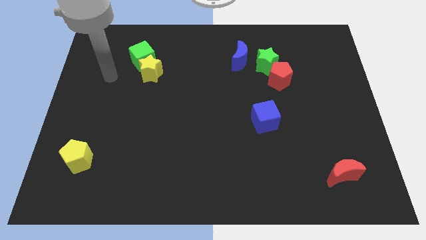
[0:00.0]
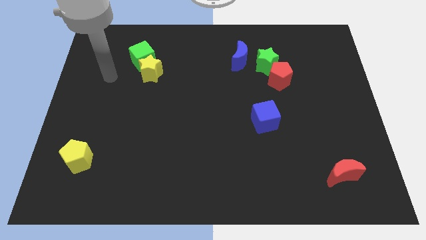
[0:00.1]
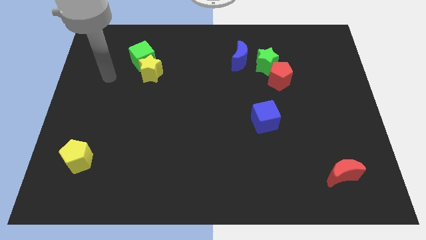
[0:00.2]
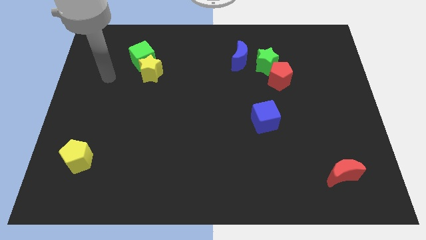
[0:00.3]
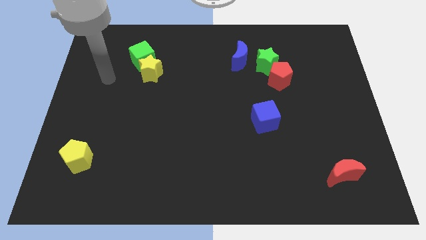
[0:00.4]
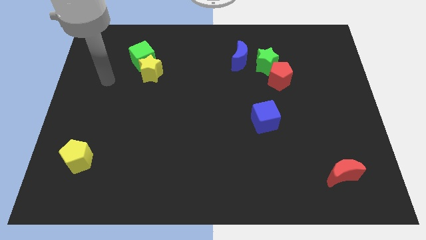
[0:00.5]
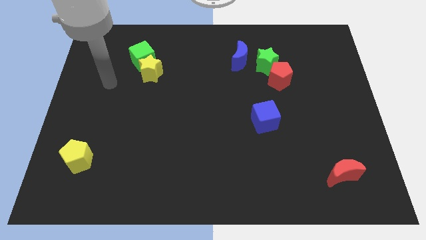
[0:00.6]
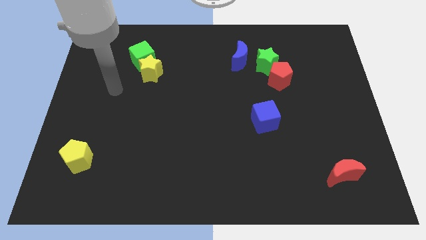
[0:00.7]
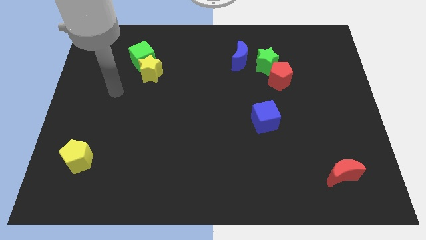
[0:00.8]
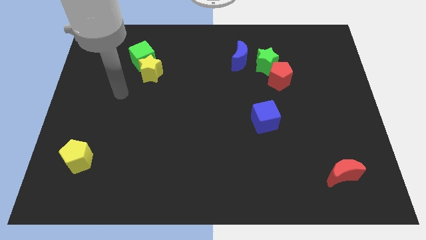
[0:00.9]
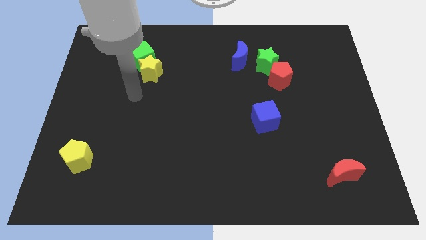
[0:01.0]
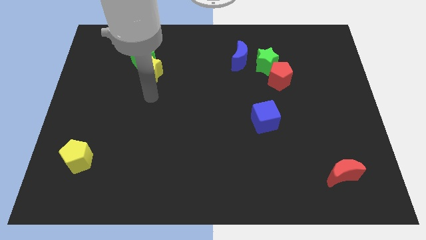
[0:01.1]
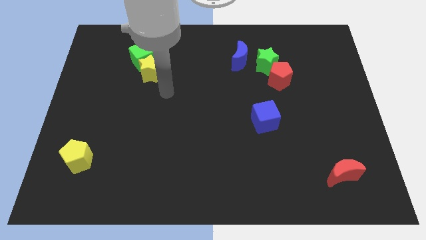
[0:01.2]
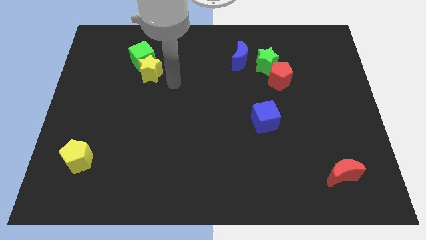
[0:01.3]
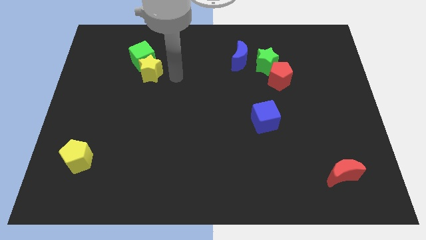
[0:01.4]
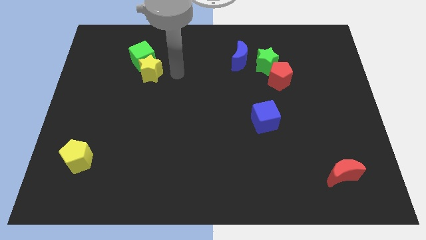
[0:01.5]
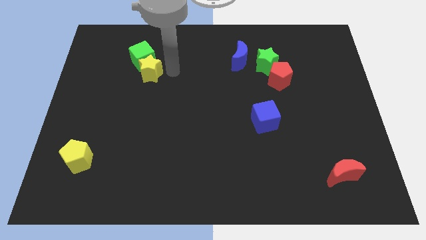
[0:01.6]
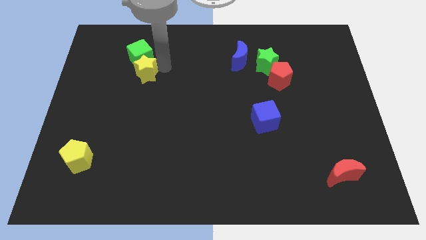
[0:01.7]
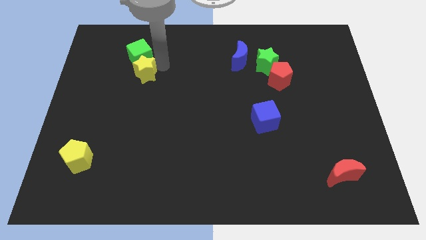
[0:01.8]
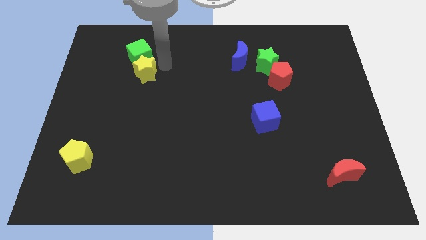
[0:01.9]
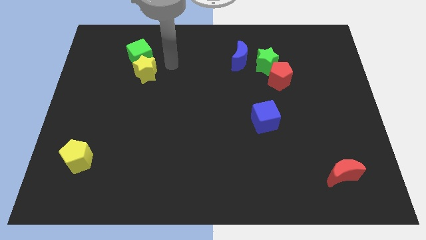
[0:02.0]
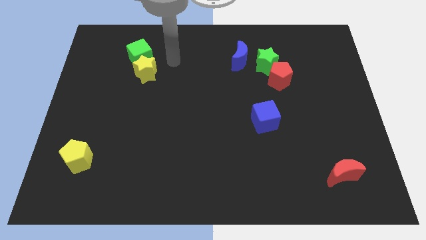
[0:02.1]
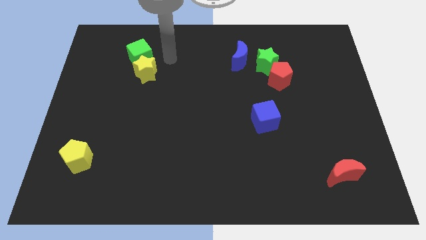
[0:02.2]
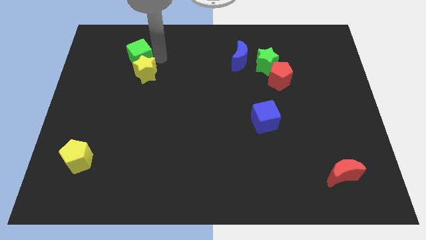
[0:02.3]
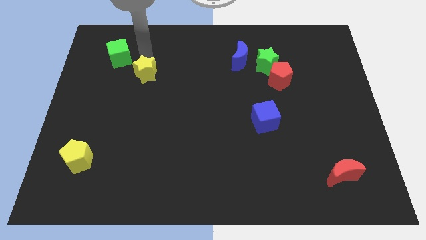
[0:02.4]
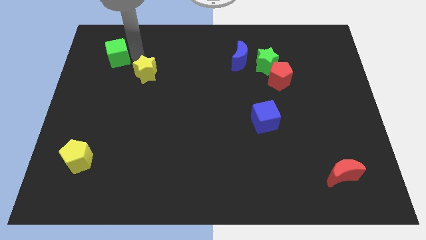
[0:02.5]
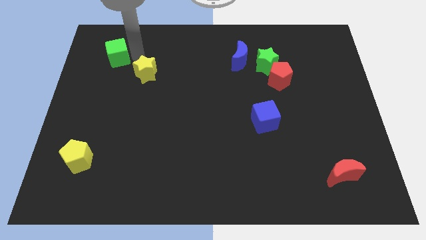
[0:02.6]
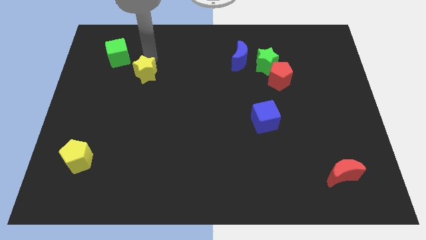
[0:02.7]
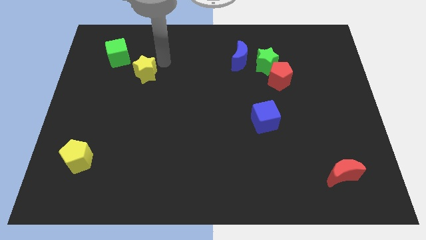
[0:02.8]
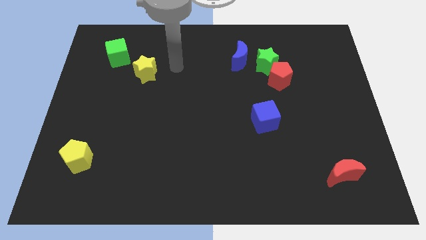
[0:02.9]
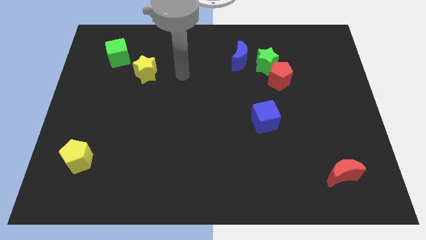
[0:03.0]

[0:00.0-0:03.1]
push green star slightly towards the left

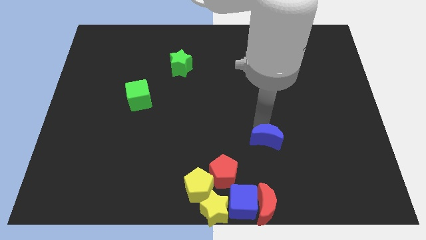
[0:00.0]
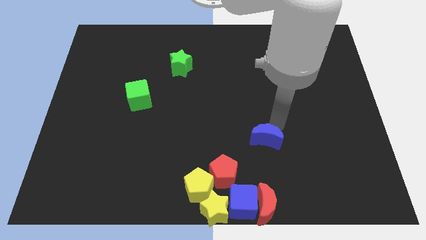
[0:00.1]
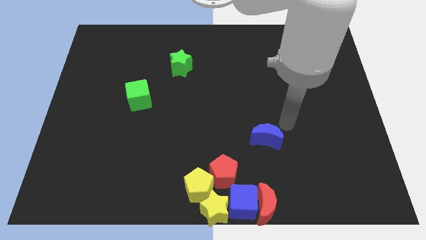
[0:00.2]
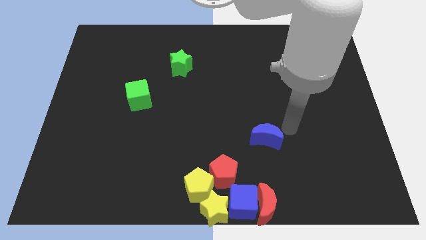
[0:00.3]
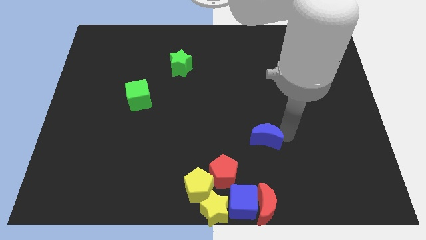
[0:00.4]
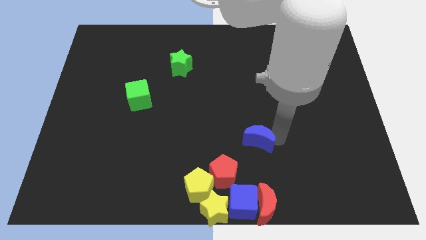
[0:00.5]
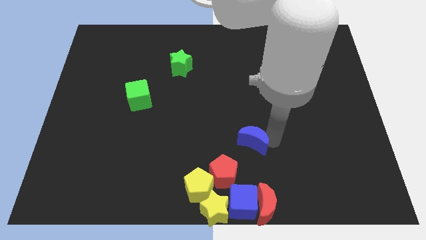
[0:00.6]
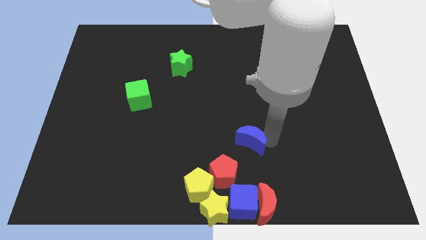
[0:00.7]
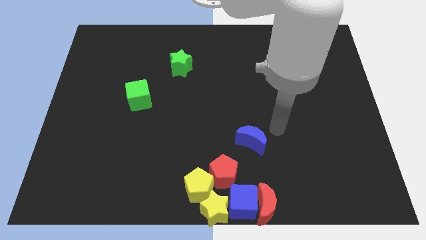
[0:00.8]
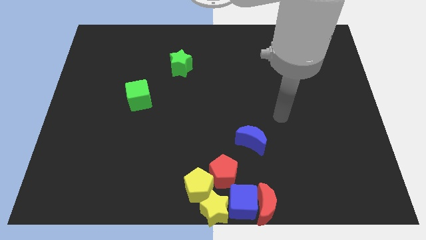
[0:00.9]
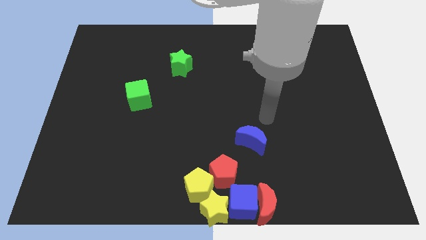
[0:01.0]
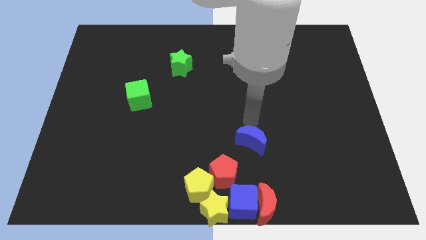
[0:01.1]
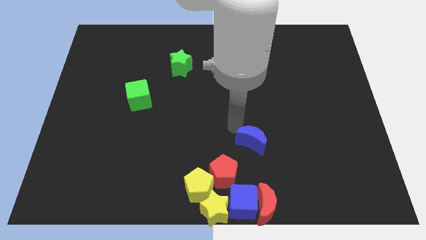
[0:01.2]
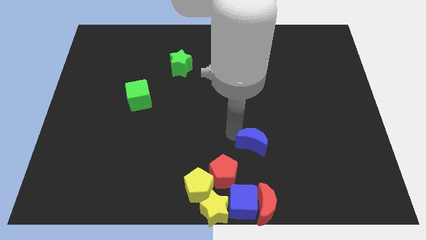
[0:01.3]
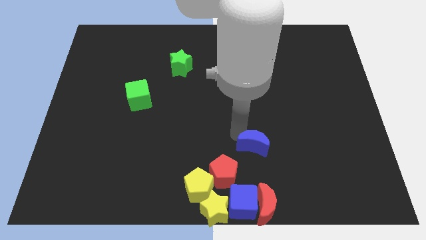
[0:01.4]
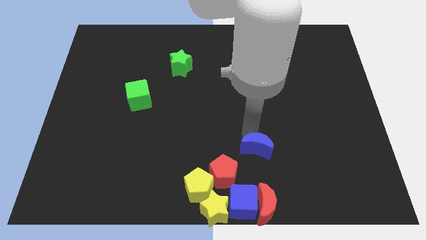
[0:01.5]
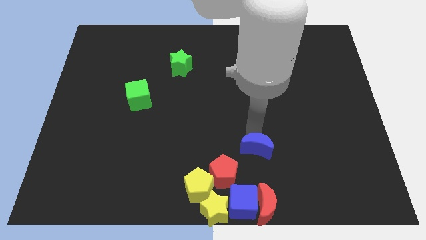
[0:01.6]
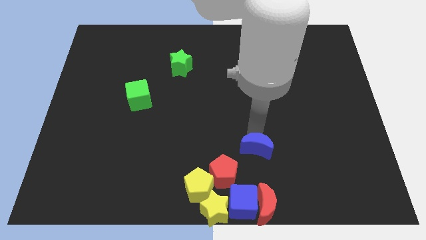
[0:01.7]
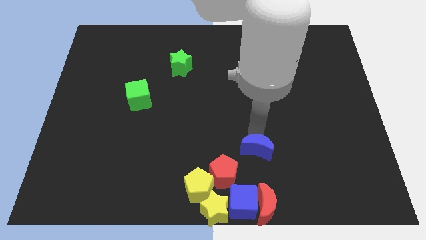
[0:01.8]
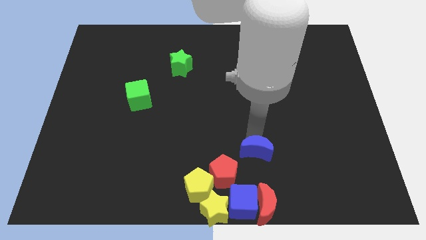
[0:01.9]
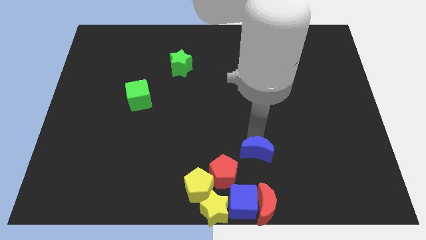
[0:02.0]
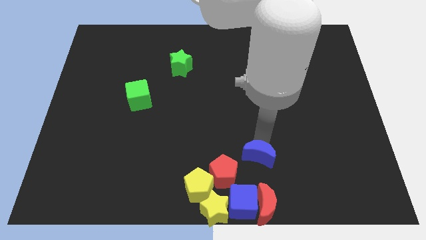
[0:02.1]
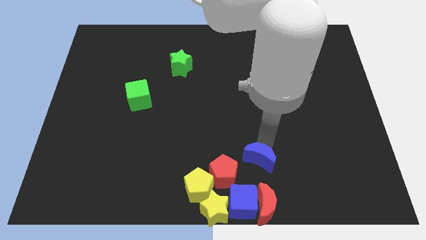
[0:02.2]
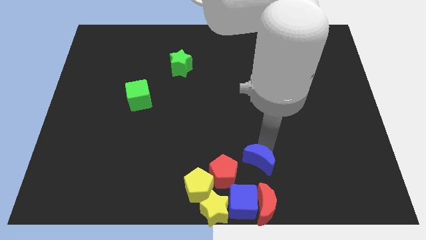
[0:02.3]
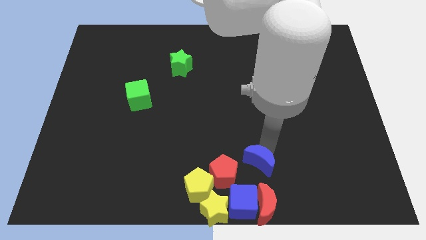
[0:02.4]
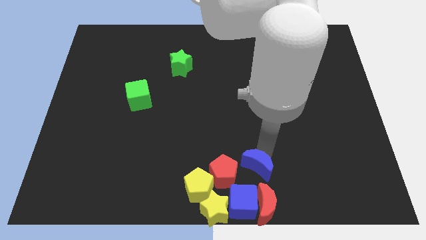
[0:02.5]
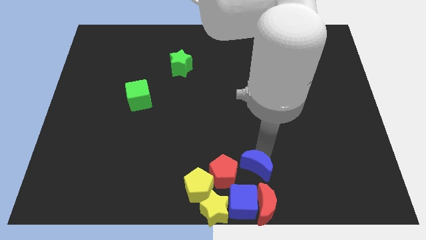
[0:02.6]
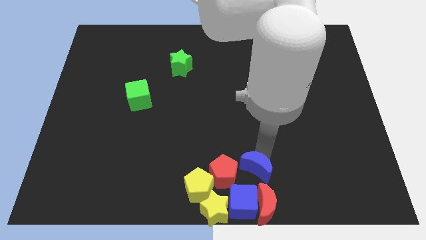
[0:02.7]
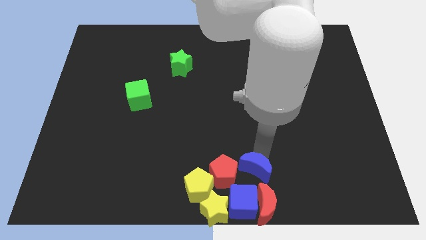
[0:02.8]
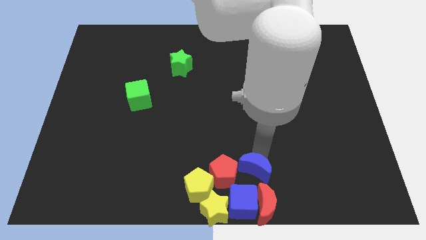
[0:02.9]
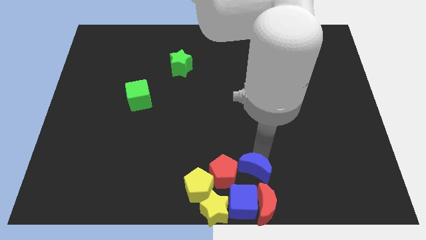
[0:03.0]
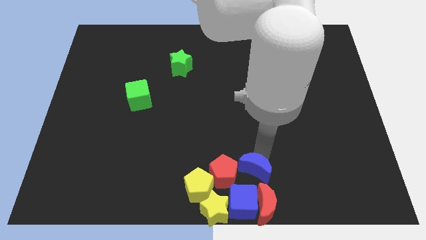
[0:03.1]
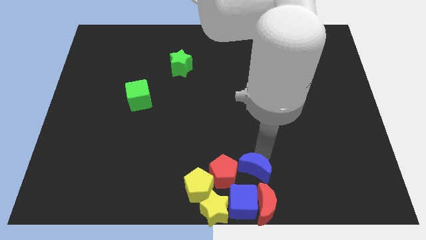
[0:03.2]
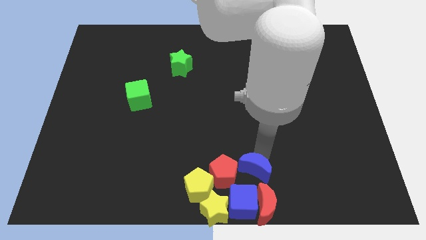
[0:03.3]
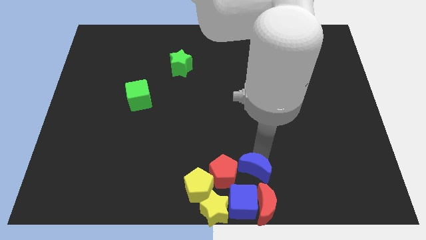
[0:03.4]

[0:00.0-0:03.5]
place the blue cube to the right of the red pentagon

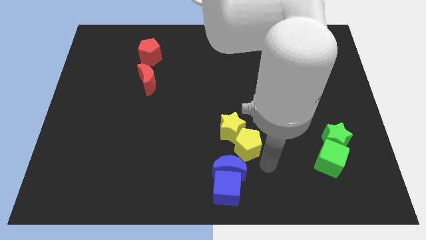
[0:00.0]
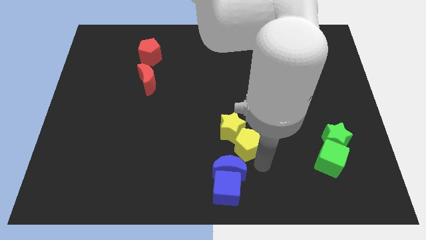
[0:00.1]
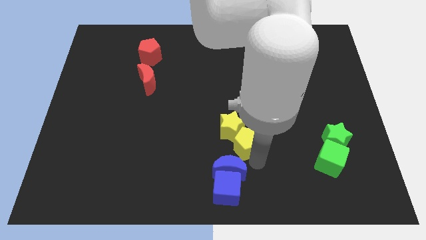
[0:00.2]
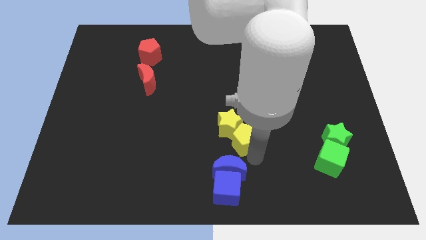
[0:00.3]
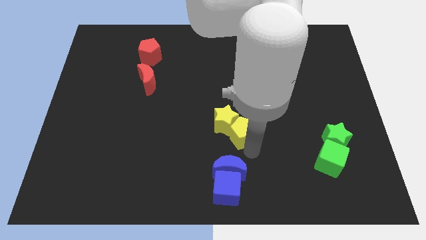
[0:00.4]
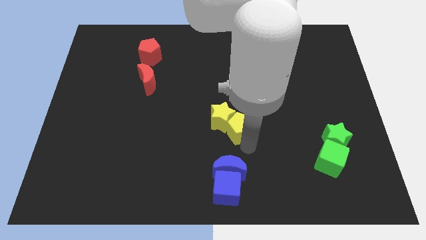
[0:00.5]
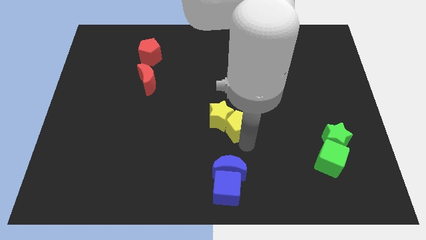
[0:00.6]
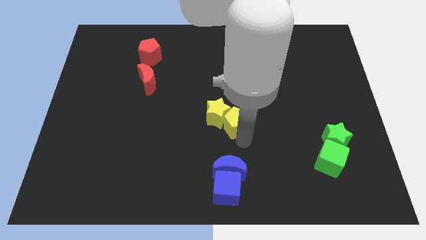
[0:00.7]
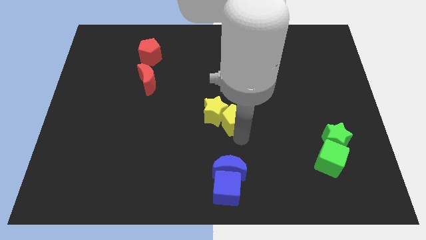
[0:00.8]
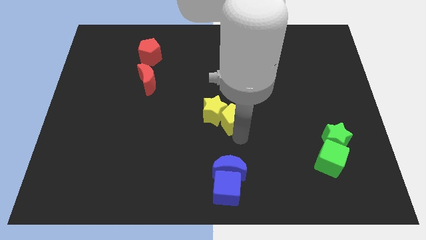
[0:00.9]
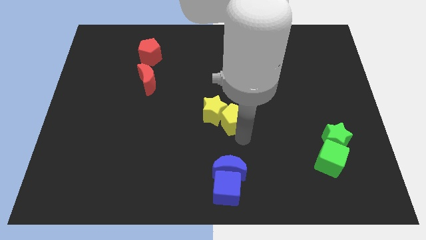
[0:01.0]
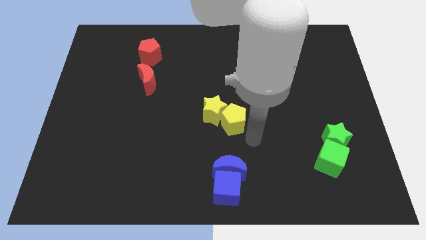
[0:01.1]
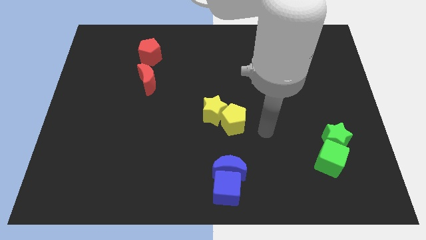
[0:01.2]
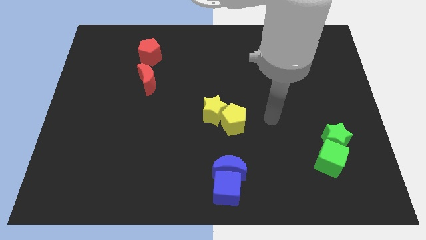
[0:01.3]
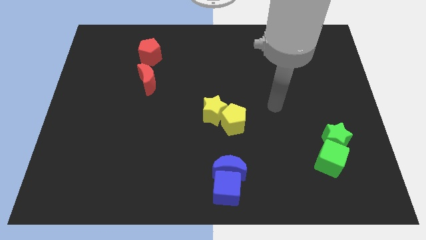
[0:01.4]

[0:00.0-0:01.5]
push the yellow blocks to the center of the board

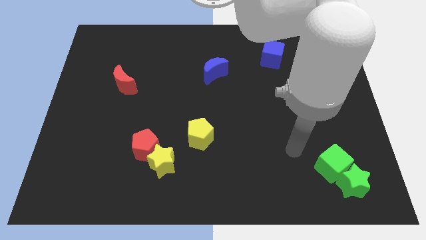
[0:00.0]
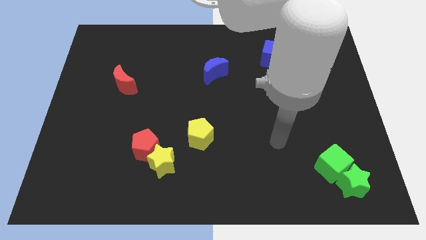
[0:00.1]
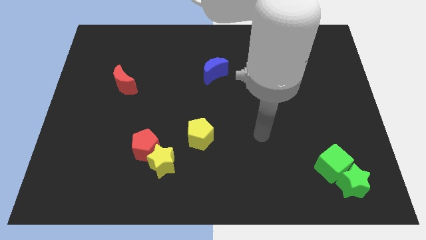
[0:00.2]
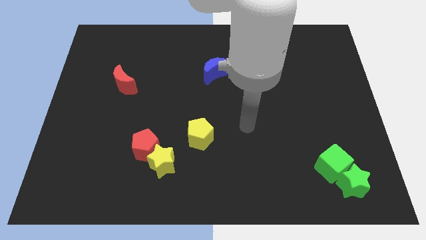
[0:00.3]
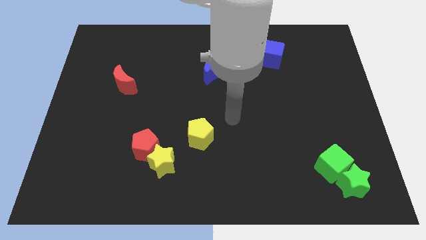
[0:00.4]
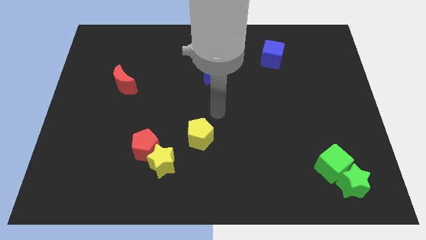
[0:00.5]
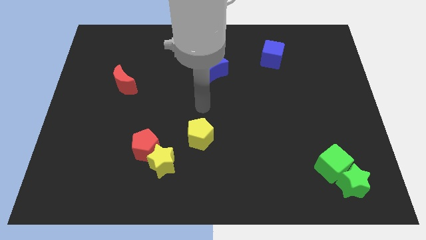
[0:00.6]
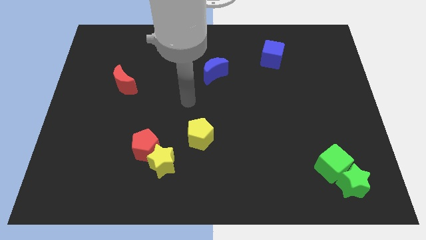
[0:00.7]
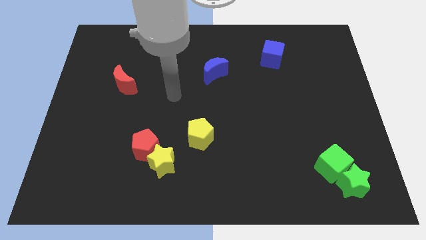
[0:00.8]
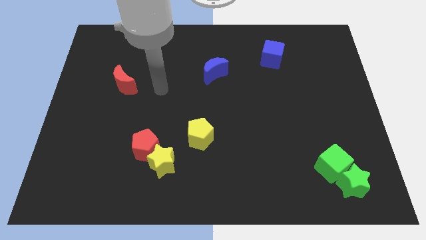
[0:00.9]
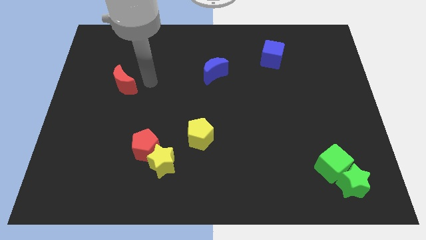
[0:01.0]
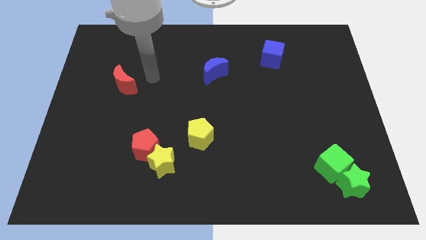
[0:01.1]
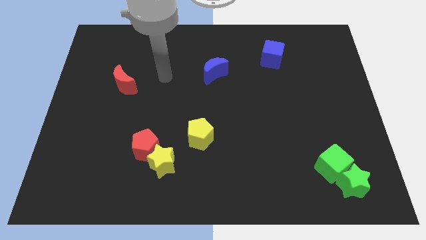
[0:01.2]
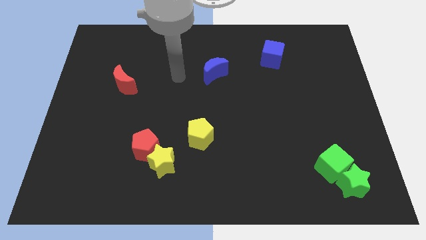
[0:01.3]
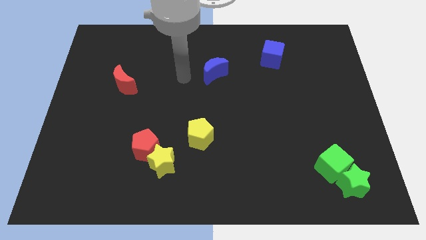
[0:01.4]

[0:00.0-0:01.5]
move the arm to the left of the blue moon
